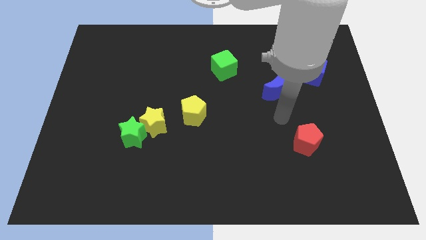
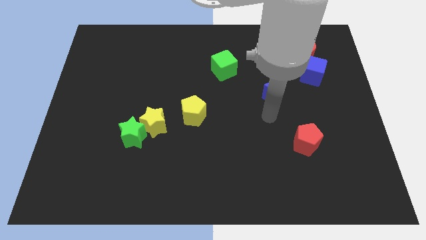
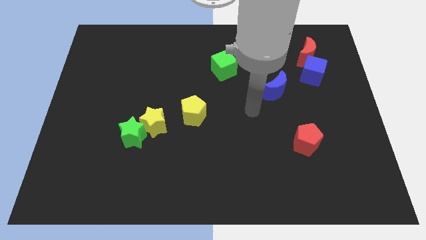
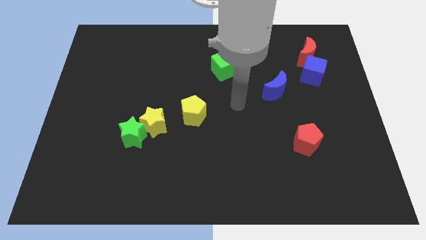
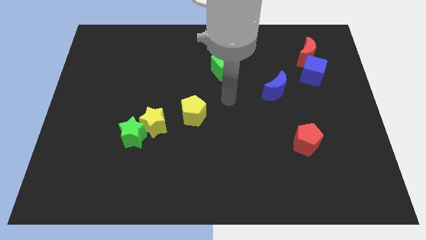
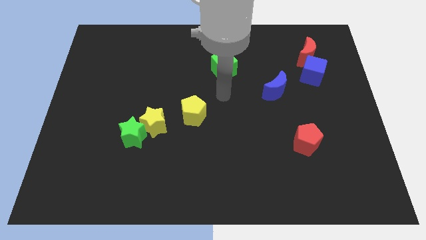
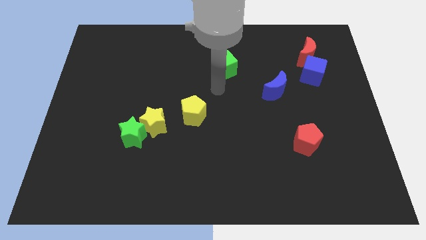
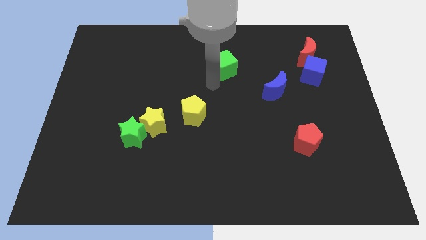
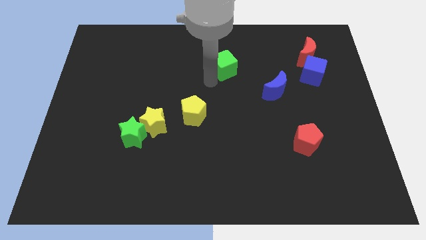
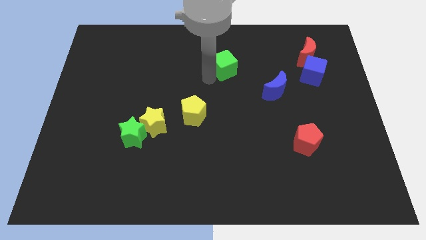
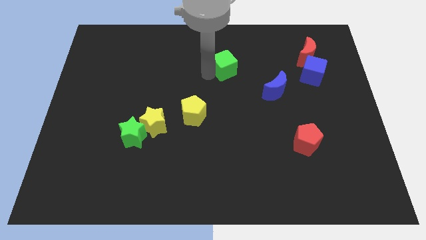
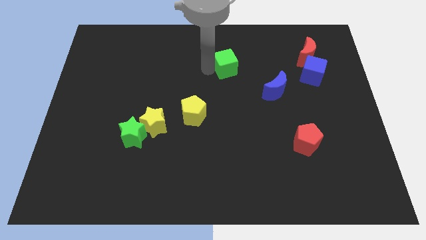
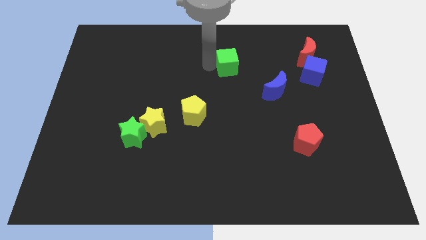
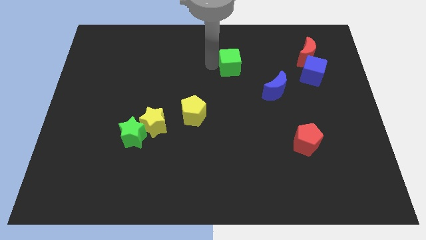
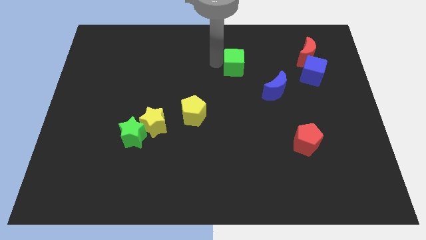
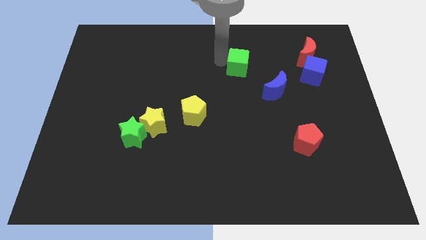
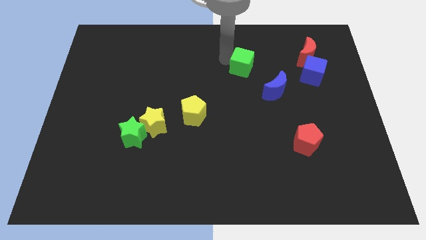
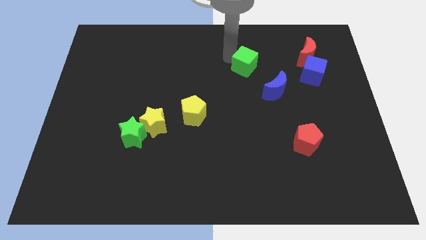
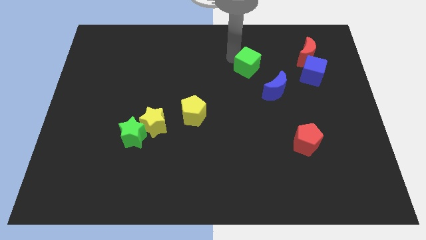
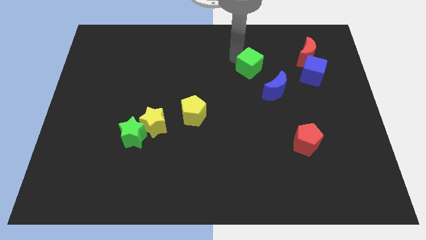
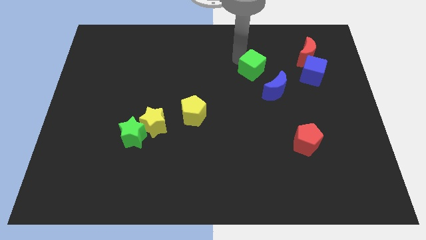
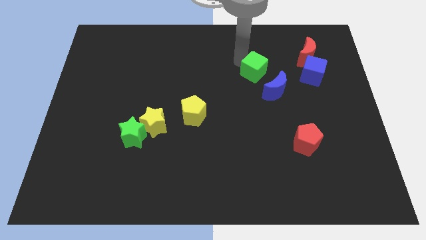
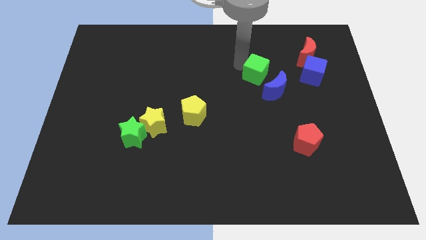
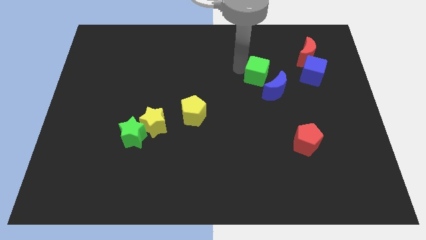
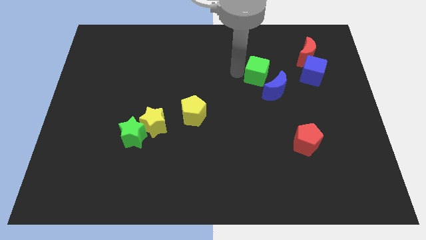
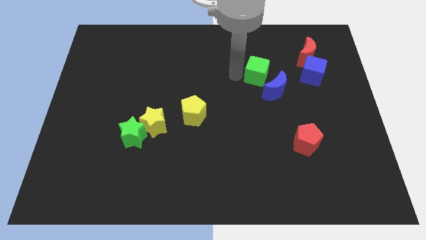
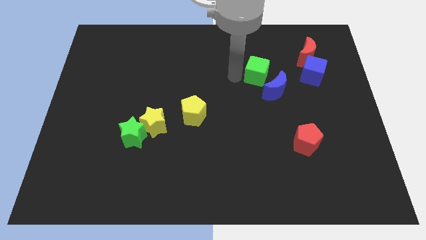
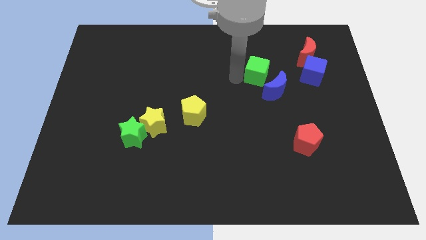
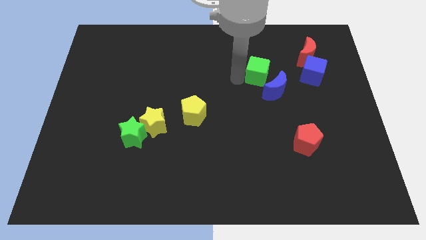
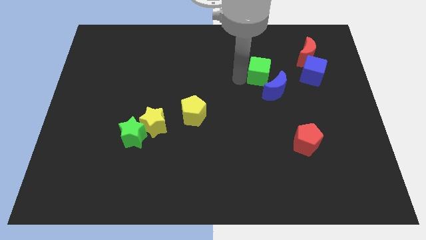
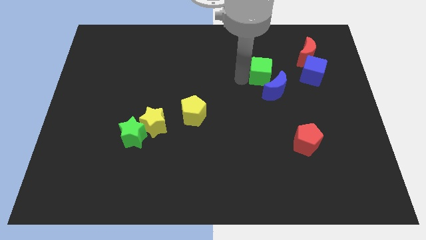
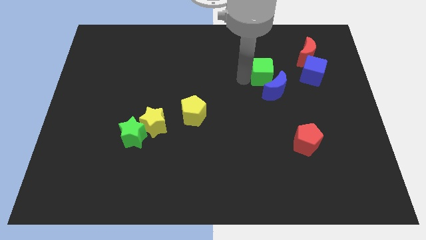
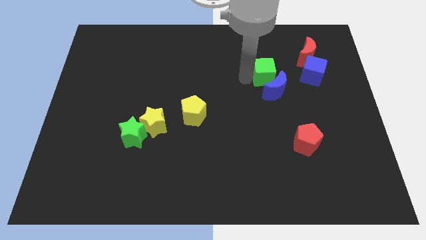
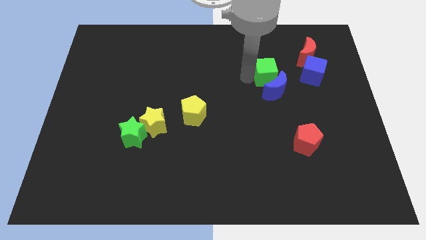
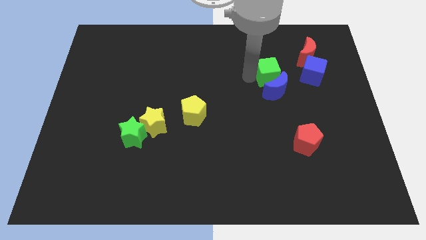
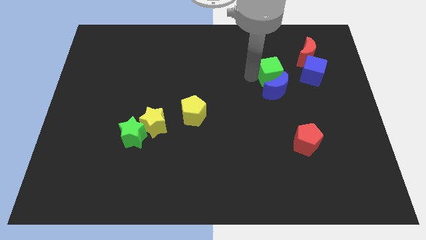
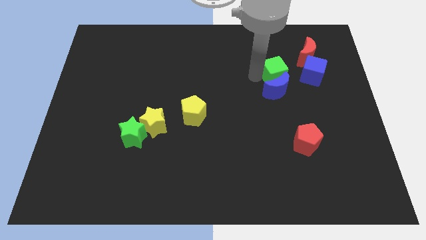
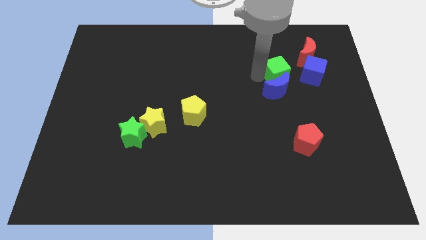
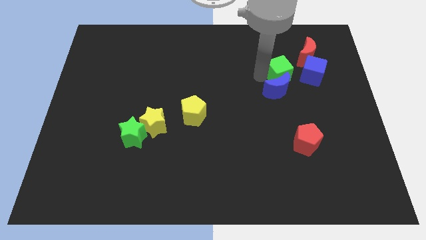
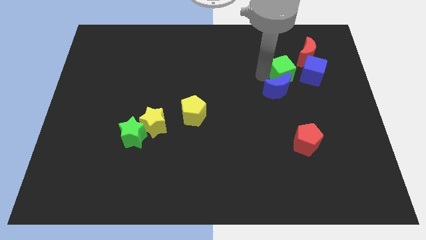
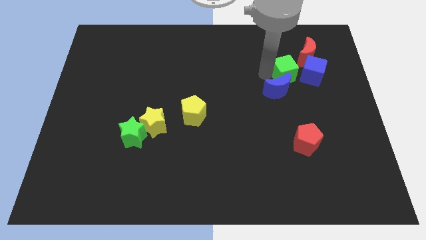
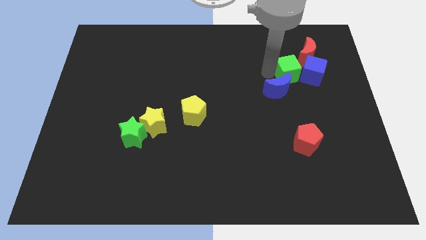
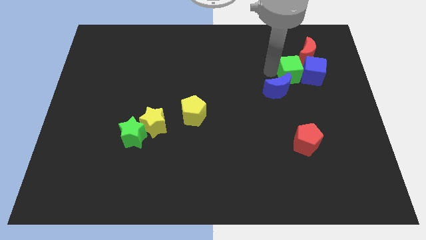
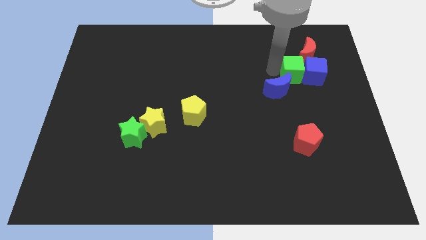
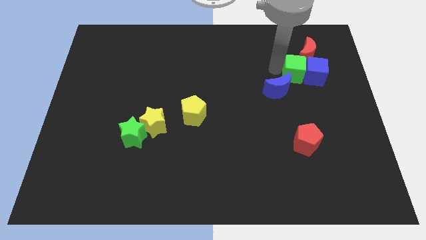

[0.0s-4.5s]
push the green cube close to the blue cube

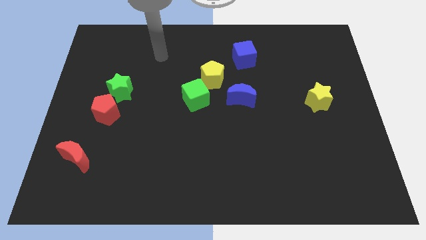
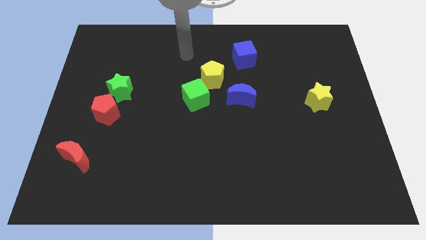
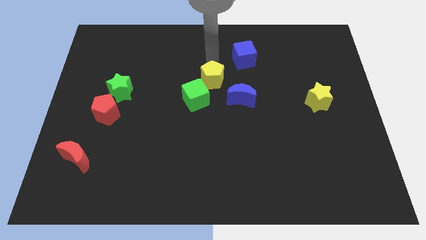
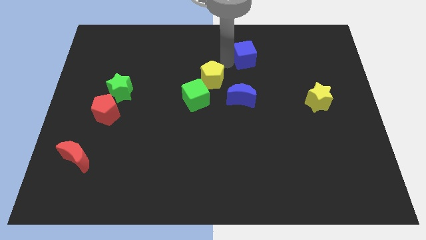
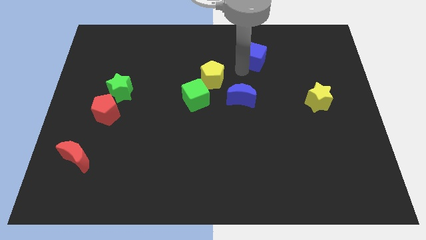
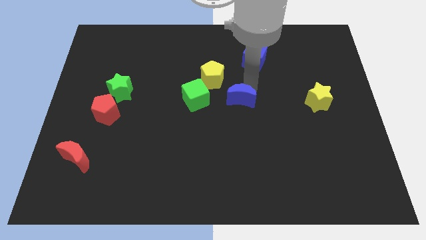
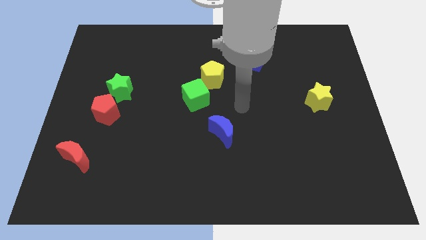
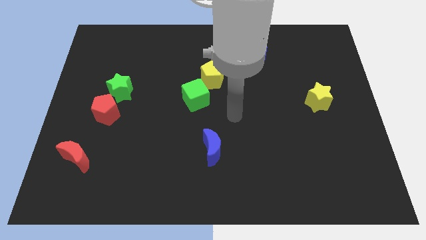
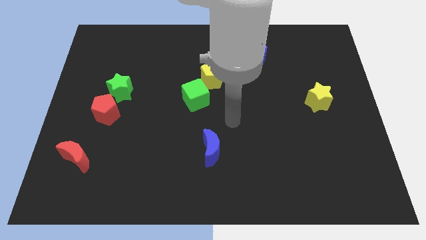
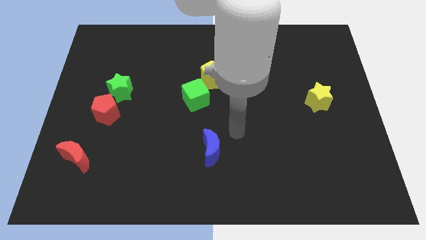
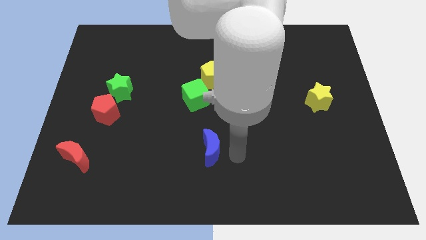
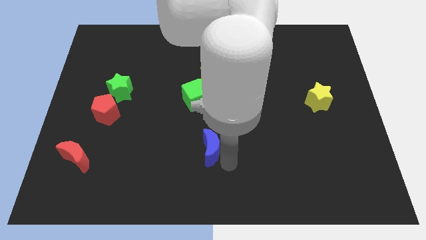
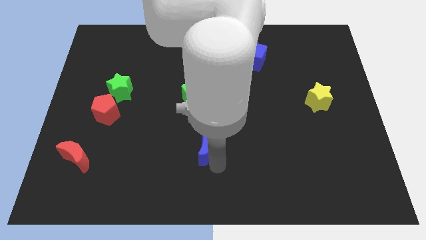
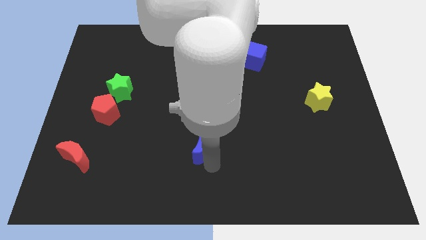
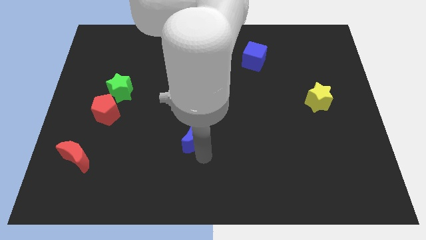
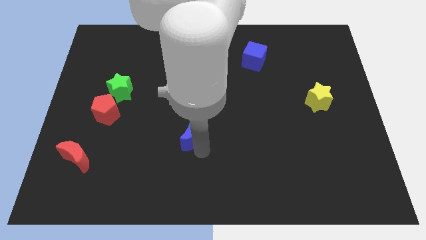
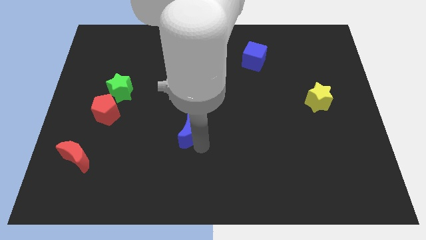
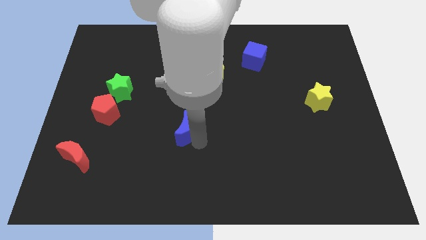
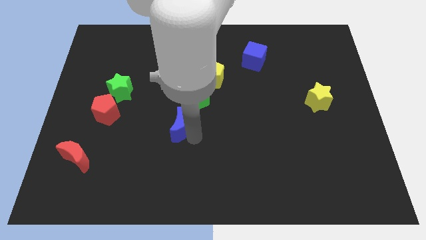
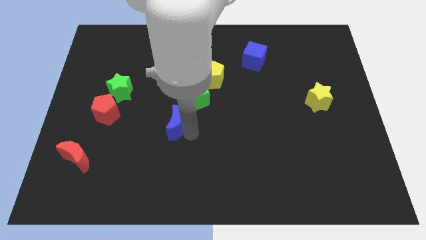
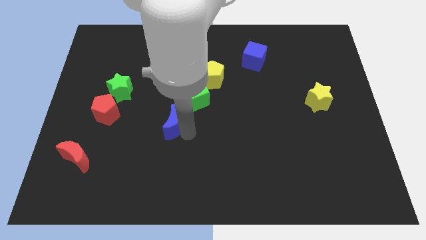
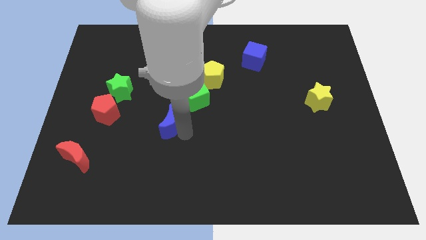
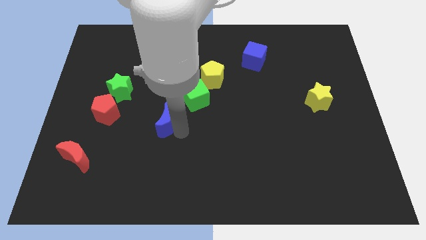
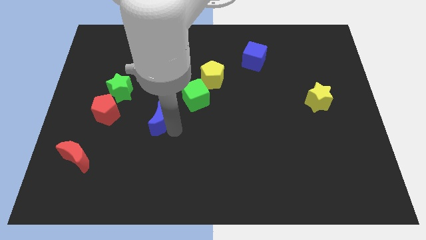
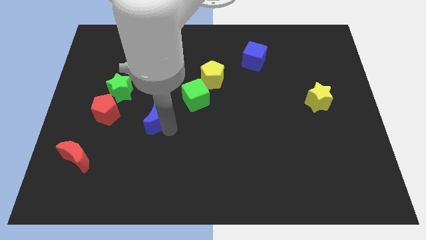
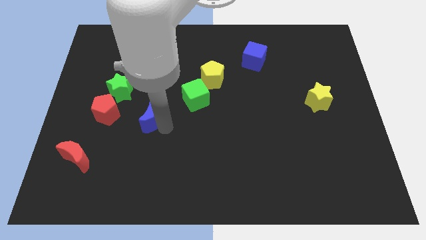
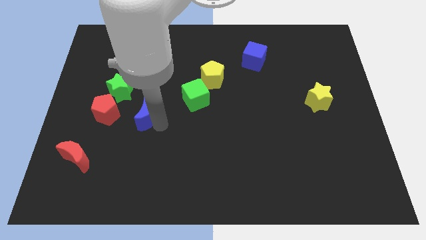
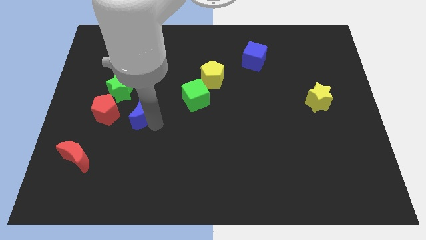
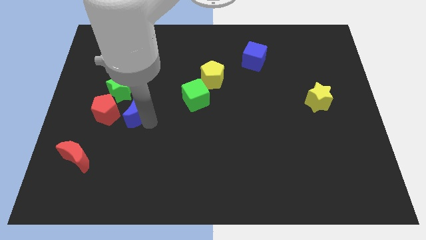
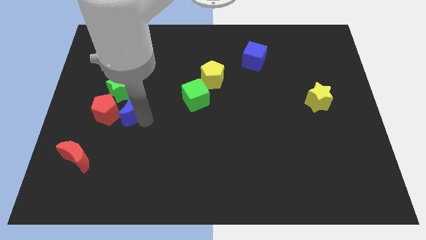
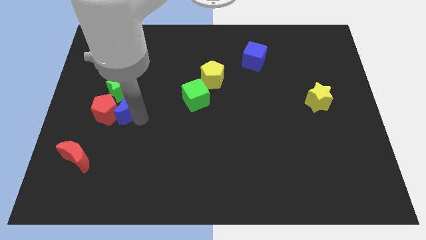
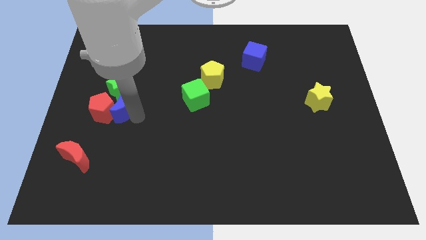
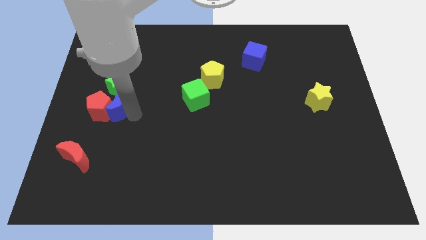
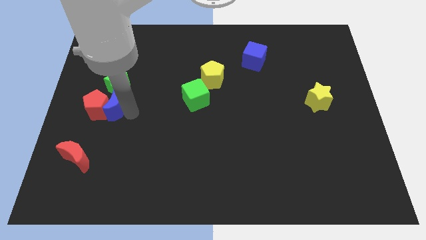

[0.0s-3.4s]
push the blue moon to the green star

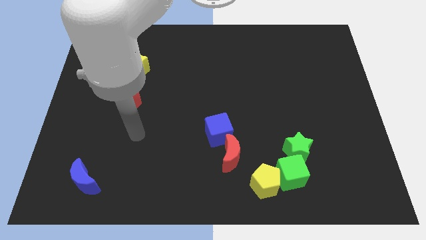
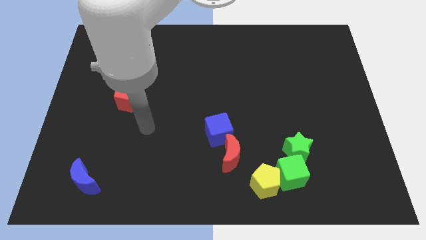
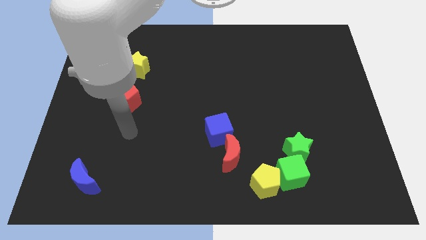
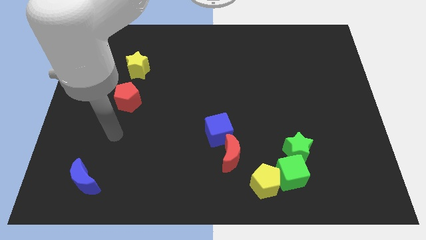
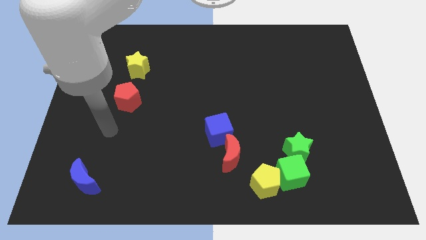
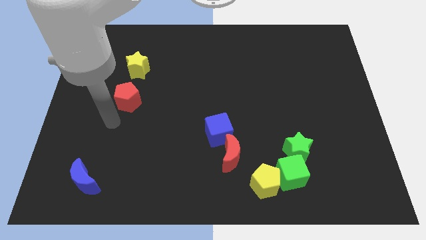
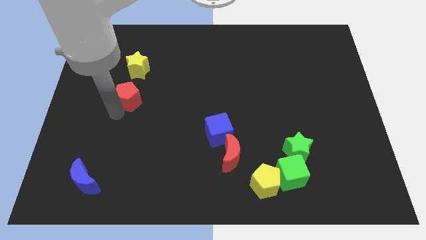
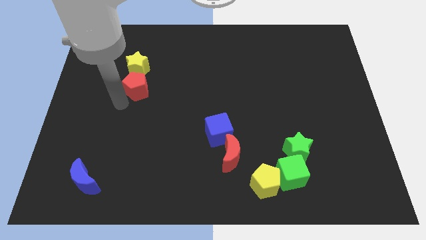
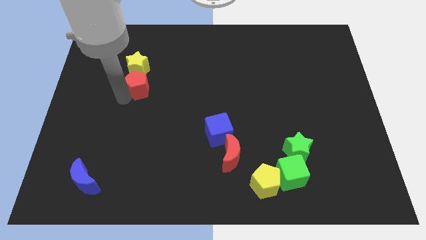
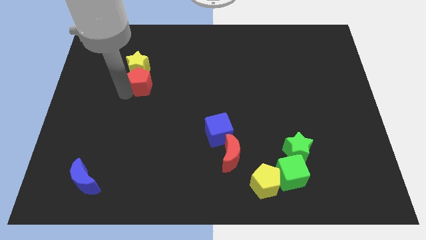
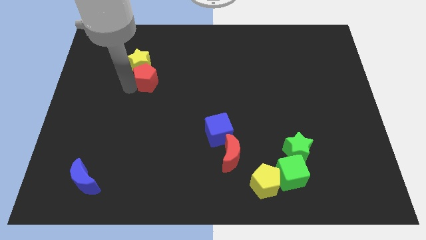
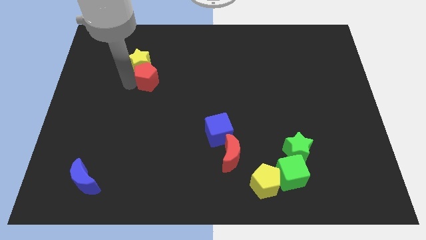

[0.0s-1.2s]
move the red pentagon to the yellow star
